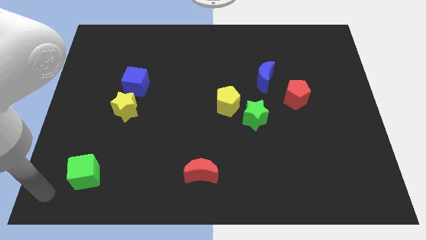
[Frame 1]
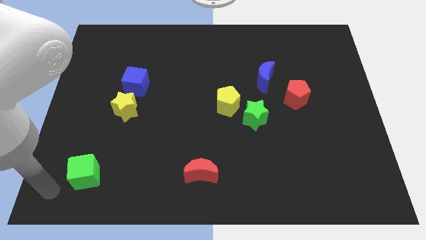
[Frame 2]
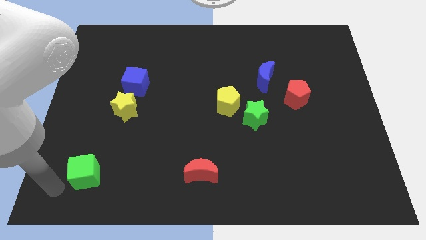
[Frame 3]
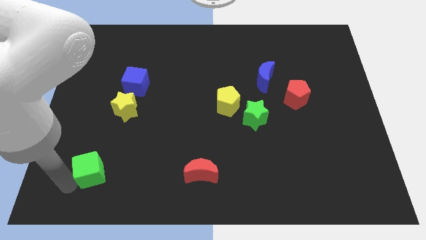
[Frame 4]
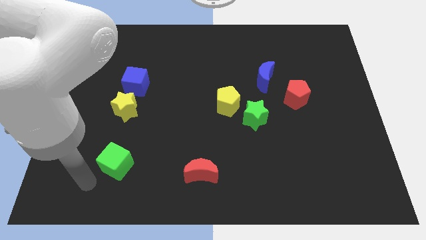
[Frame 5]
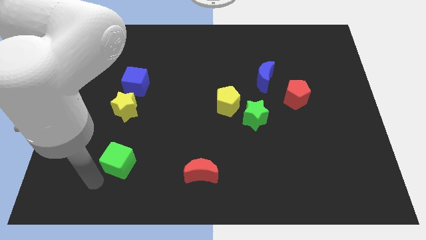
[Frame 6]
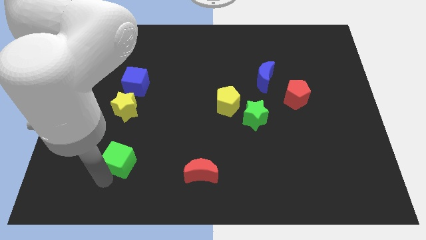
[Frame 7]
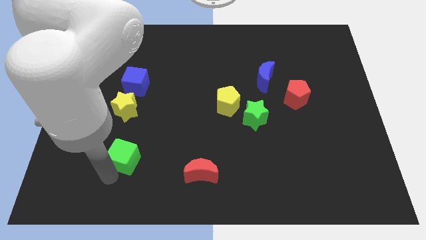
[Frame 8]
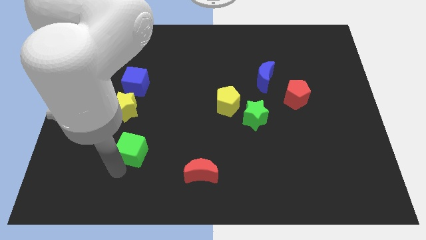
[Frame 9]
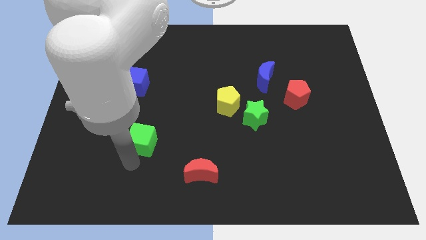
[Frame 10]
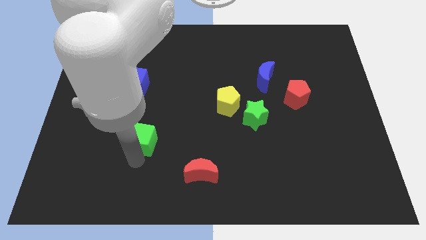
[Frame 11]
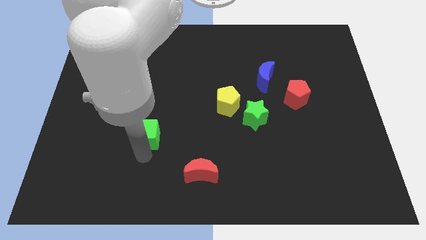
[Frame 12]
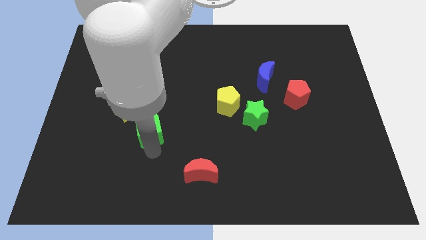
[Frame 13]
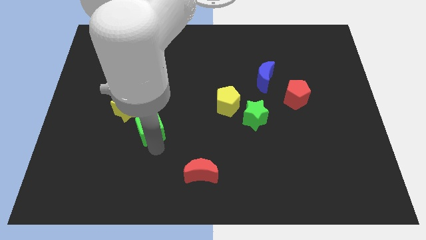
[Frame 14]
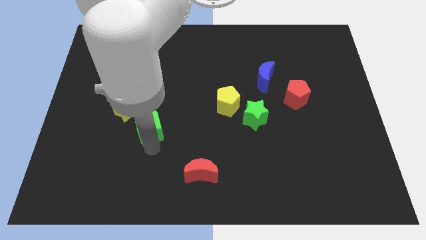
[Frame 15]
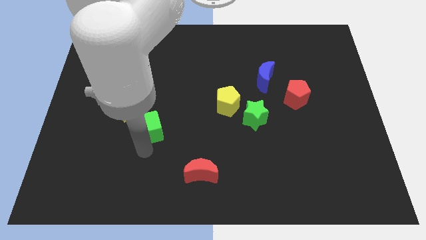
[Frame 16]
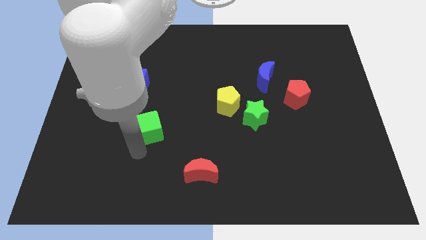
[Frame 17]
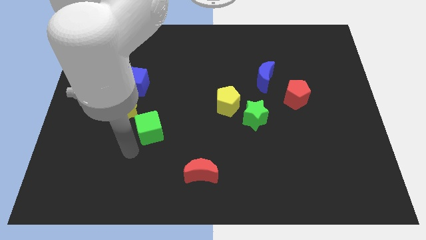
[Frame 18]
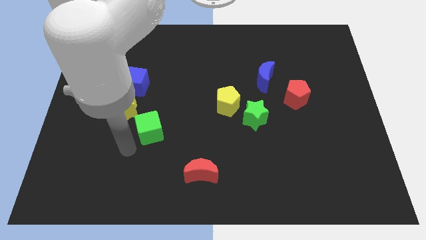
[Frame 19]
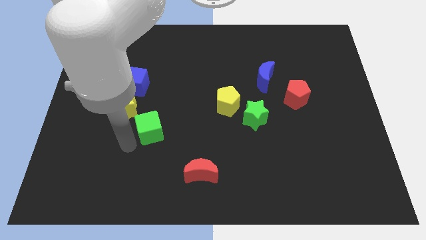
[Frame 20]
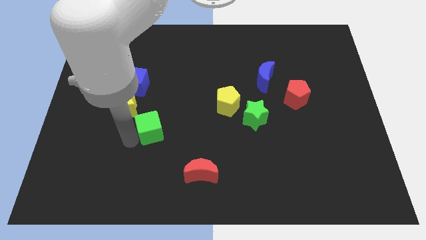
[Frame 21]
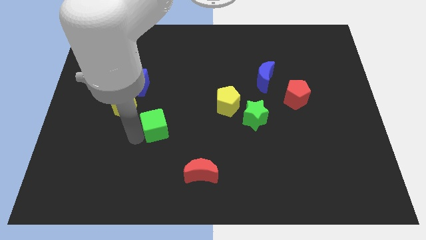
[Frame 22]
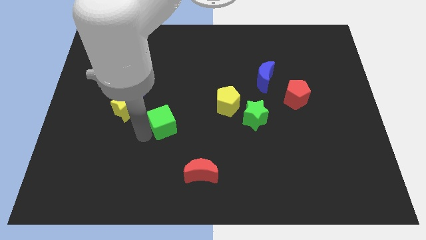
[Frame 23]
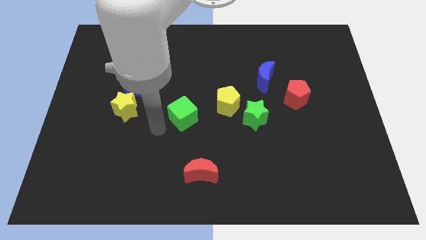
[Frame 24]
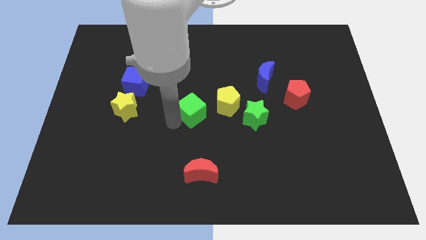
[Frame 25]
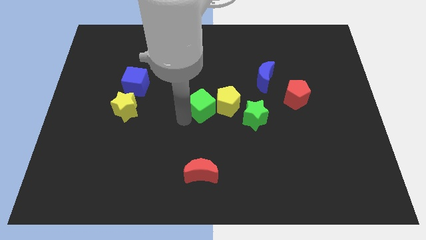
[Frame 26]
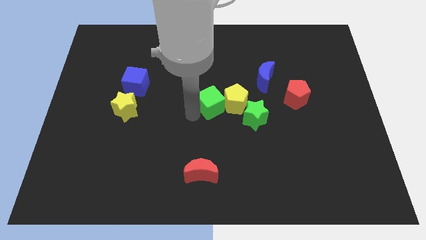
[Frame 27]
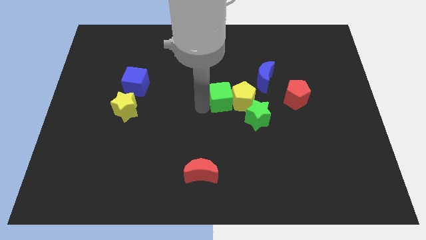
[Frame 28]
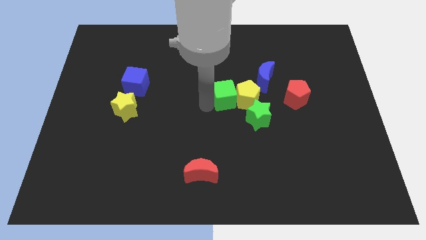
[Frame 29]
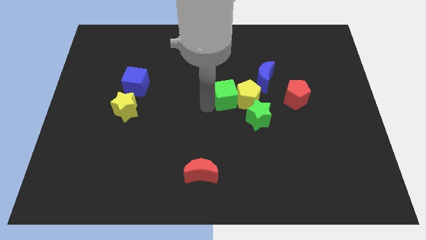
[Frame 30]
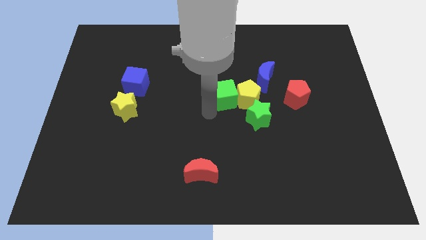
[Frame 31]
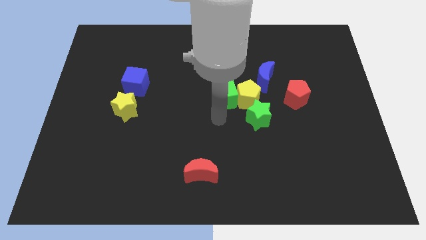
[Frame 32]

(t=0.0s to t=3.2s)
slide green cube into yellow pentagon

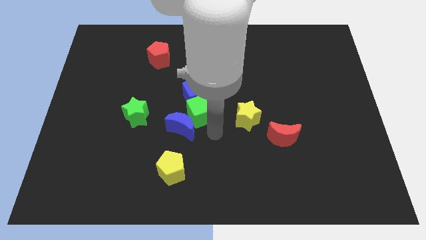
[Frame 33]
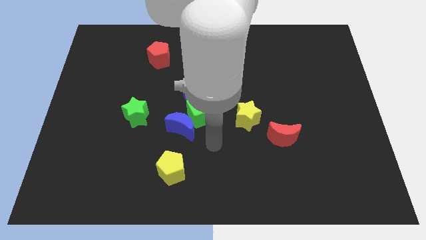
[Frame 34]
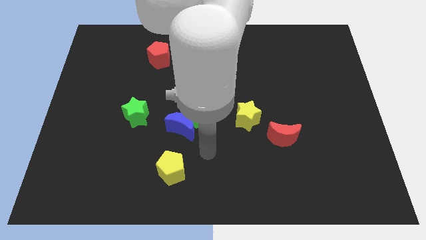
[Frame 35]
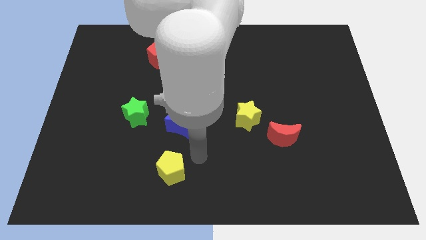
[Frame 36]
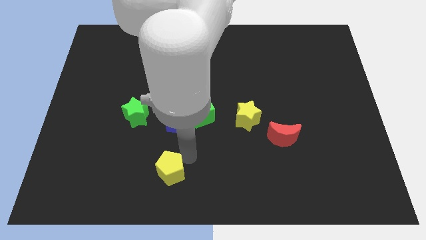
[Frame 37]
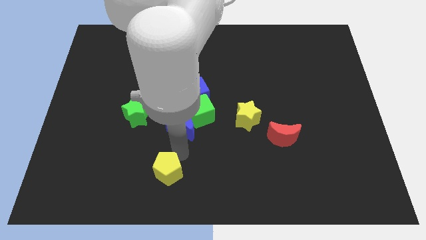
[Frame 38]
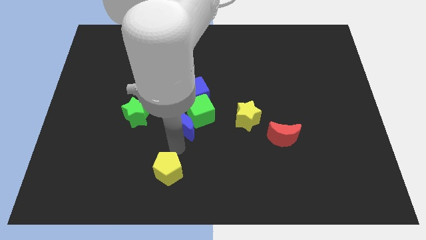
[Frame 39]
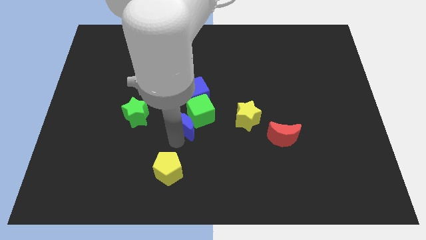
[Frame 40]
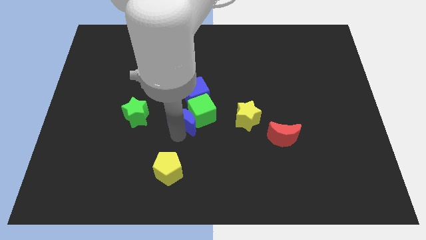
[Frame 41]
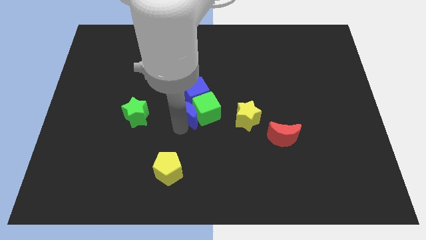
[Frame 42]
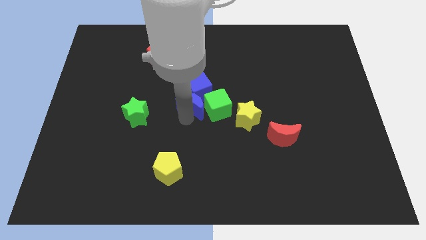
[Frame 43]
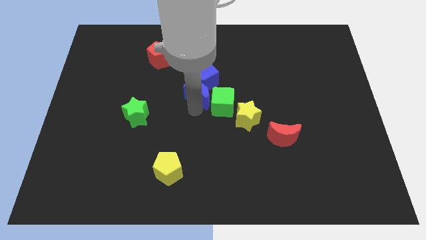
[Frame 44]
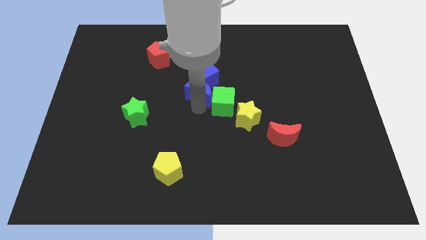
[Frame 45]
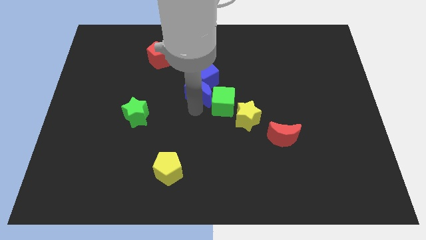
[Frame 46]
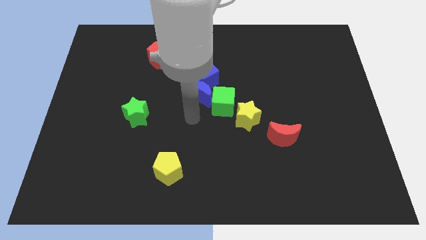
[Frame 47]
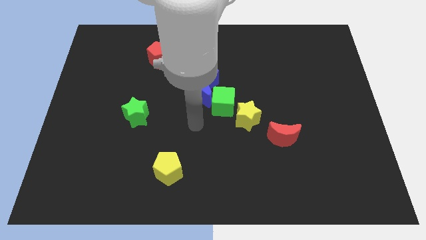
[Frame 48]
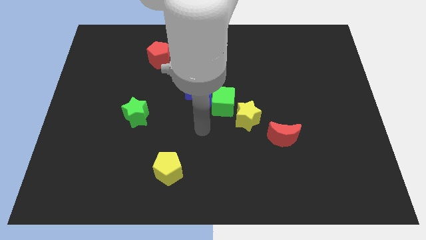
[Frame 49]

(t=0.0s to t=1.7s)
move the blue moon into the blue cube

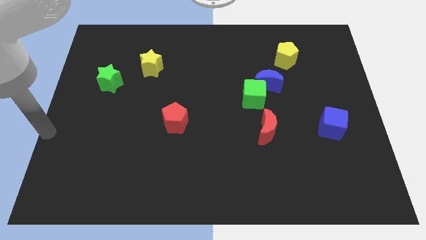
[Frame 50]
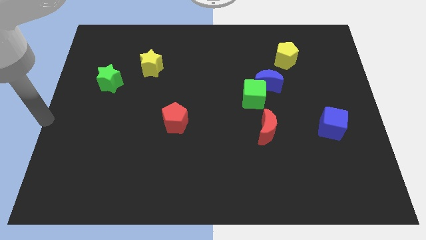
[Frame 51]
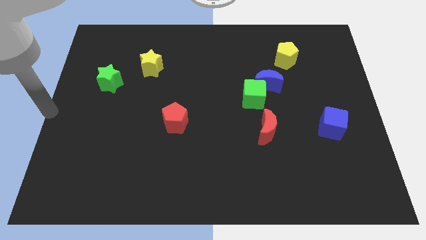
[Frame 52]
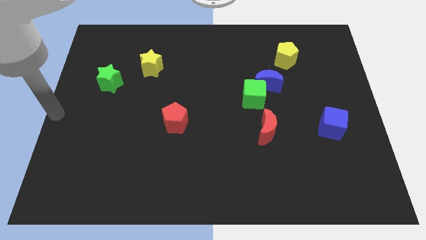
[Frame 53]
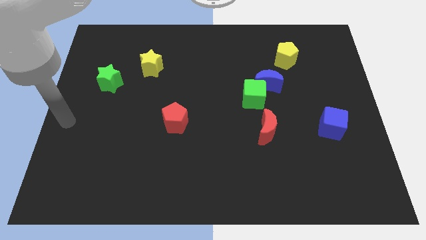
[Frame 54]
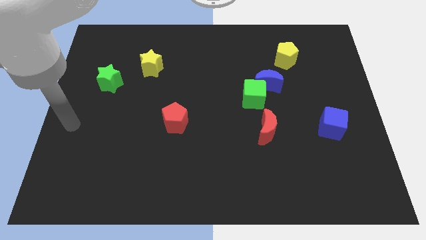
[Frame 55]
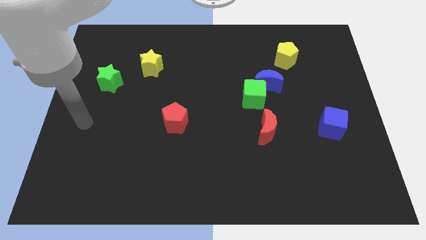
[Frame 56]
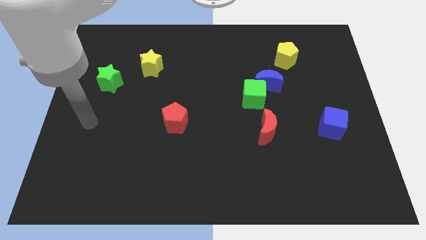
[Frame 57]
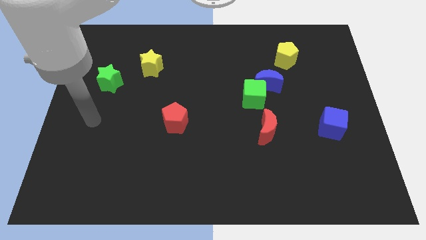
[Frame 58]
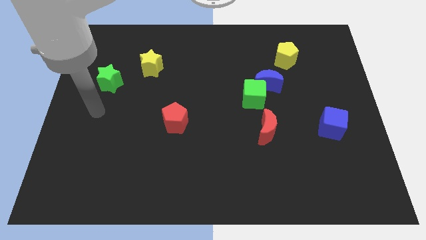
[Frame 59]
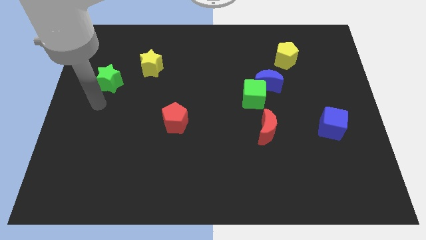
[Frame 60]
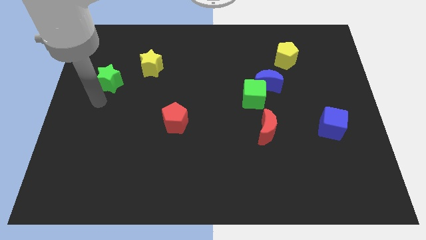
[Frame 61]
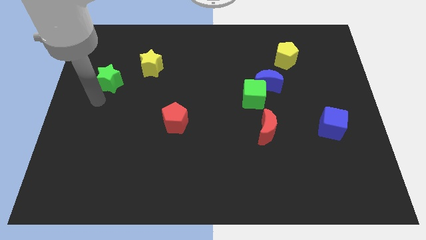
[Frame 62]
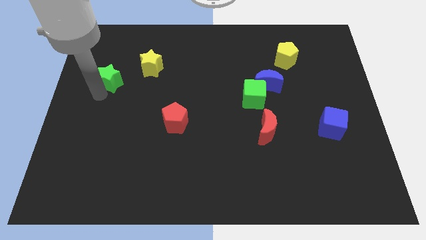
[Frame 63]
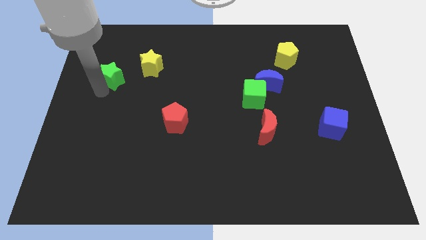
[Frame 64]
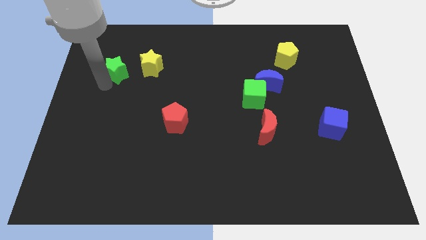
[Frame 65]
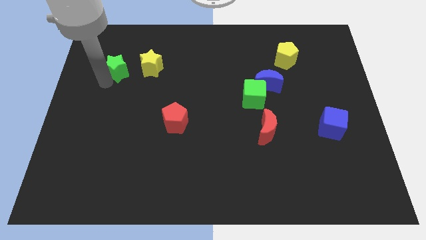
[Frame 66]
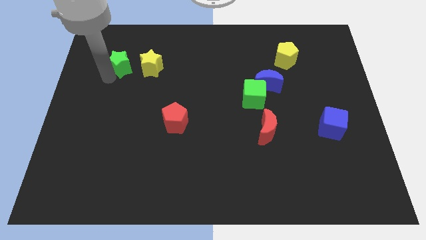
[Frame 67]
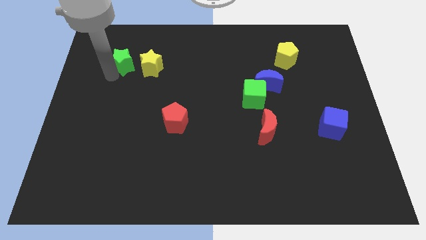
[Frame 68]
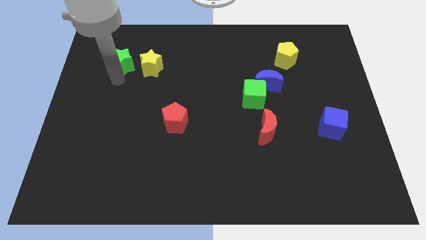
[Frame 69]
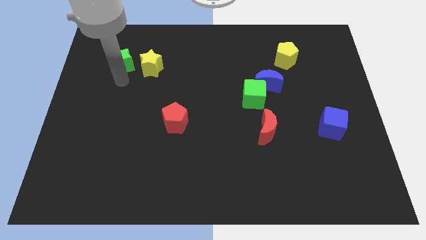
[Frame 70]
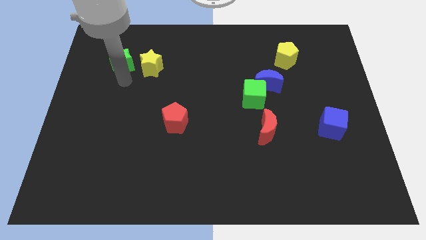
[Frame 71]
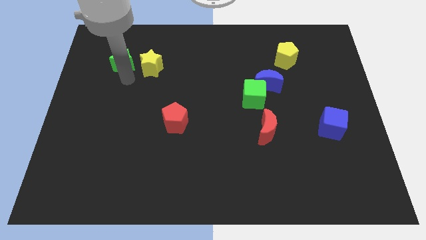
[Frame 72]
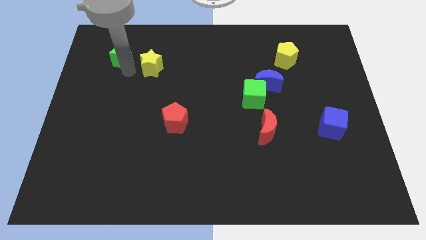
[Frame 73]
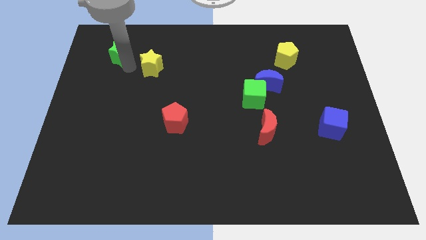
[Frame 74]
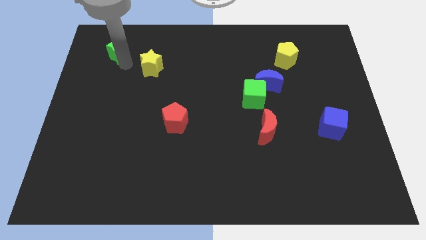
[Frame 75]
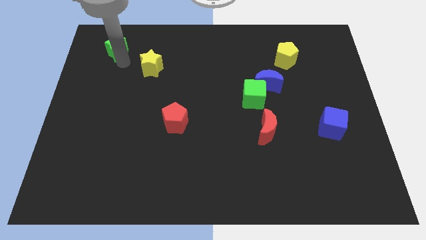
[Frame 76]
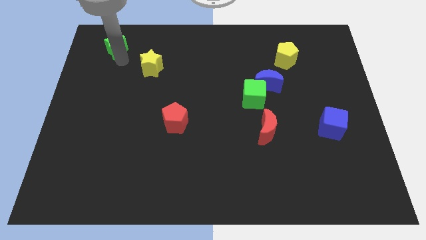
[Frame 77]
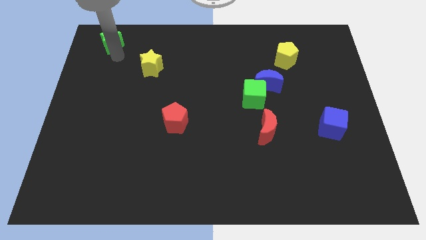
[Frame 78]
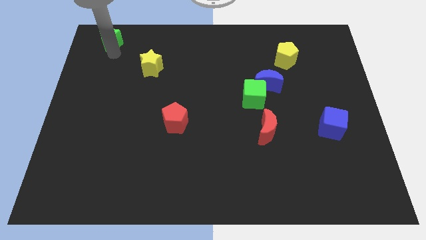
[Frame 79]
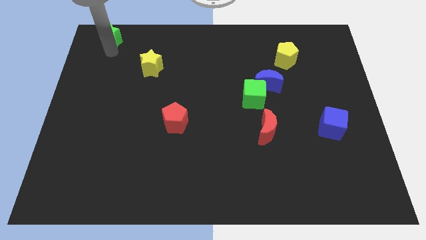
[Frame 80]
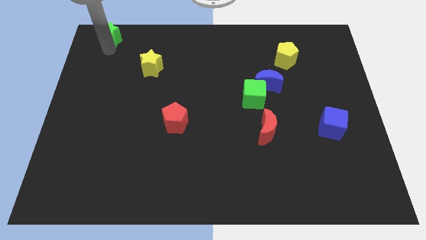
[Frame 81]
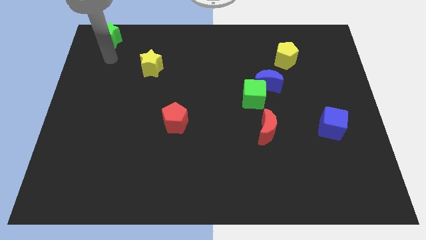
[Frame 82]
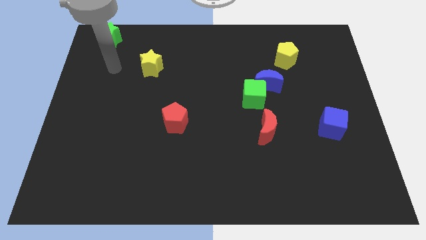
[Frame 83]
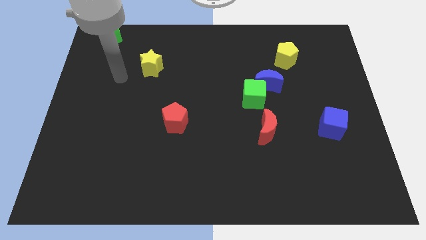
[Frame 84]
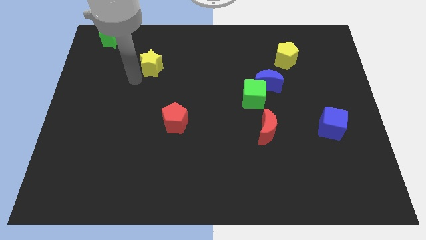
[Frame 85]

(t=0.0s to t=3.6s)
move the green star to the top left corner of the board

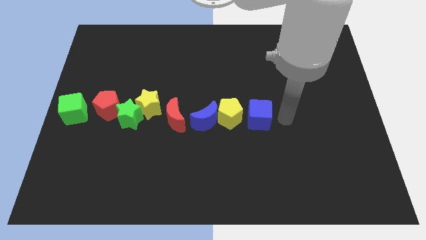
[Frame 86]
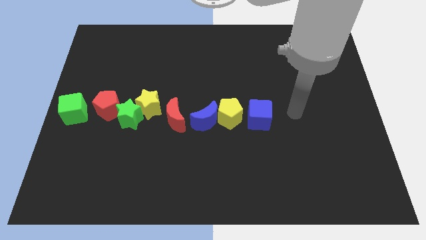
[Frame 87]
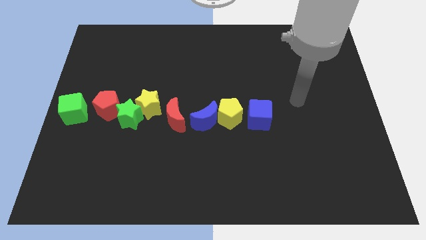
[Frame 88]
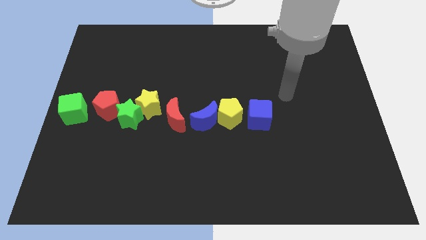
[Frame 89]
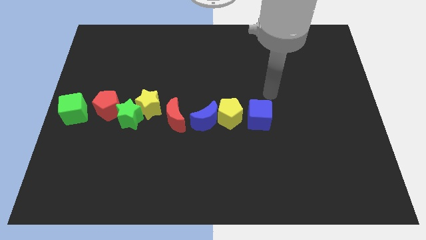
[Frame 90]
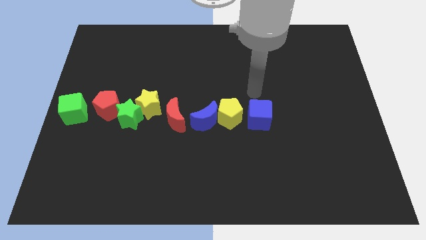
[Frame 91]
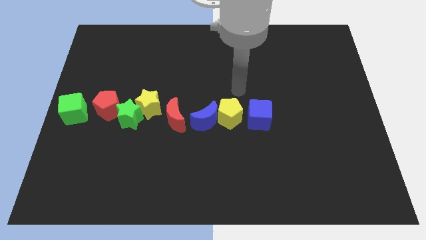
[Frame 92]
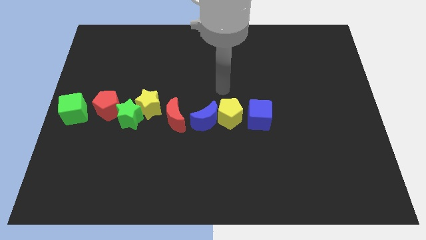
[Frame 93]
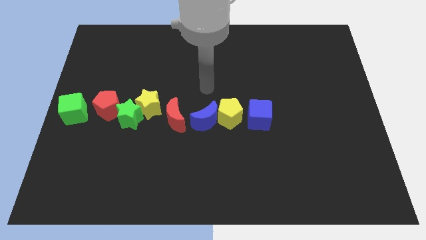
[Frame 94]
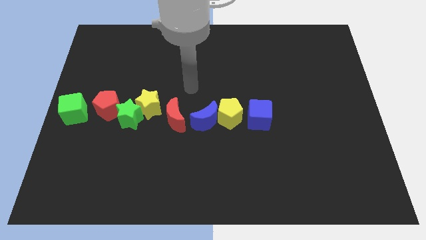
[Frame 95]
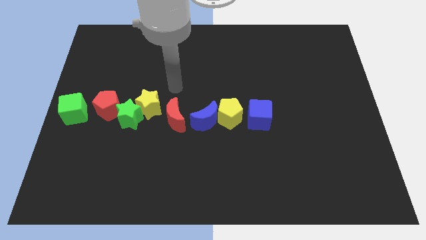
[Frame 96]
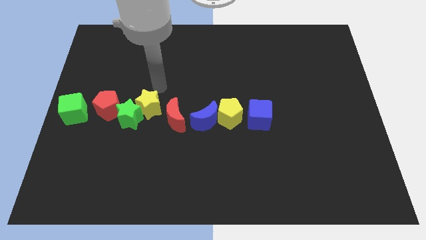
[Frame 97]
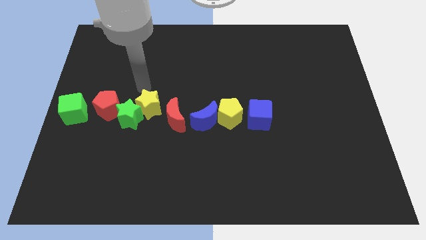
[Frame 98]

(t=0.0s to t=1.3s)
go to the top of the yellow star
